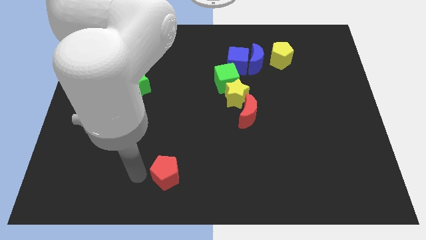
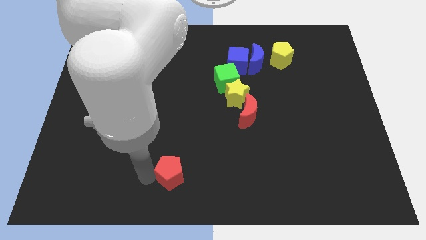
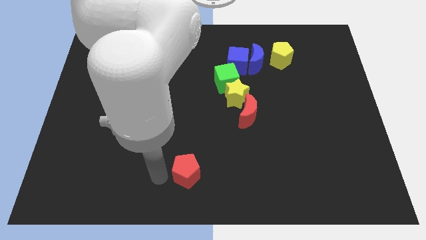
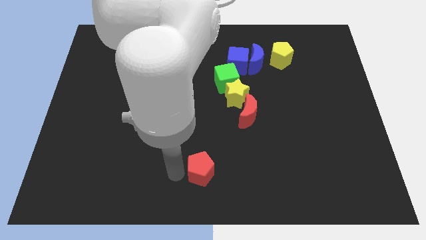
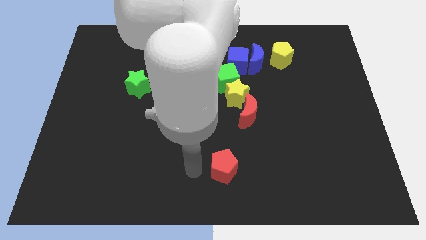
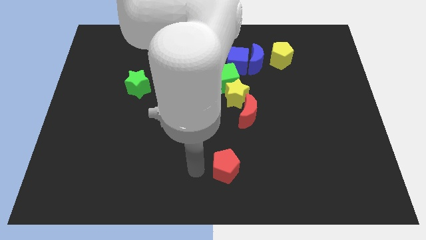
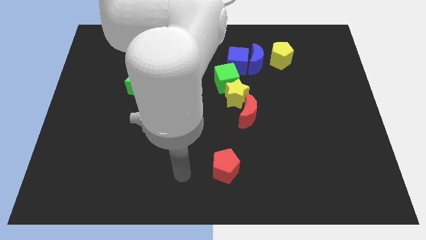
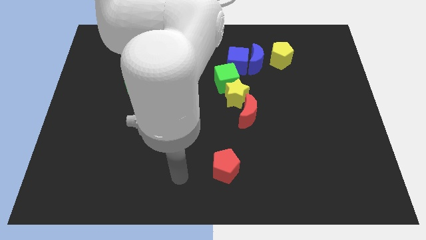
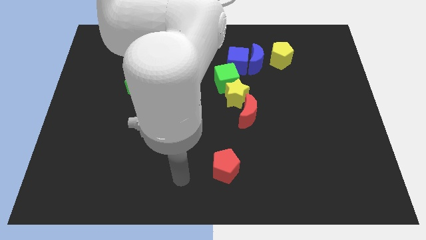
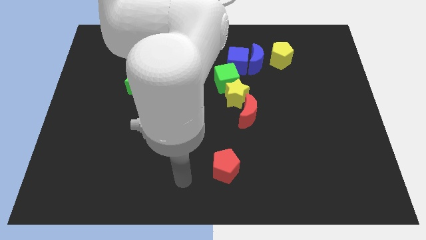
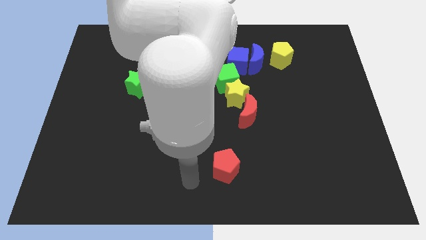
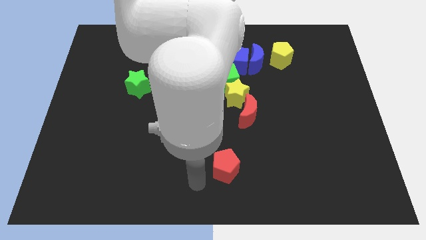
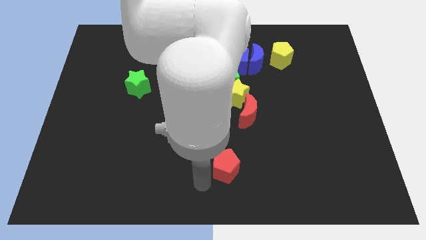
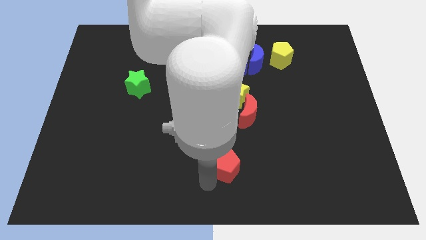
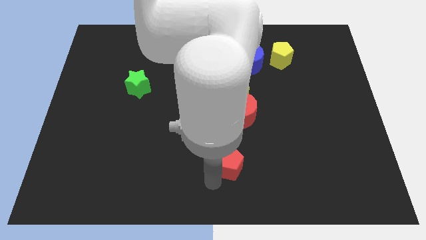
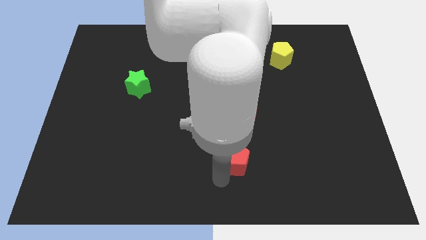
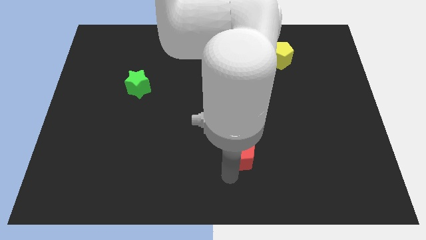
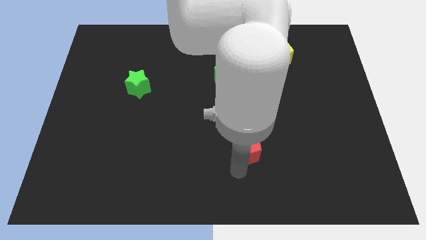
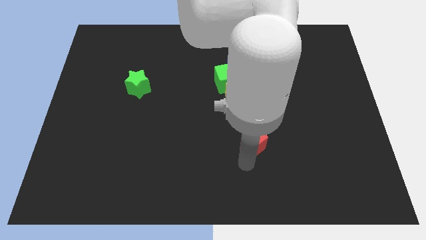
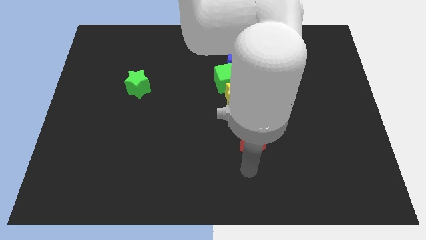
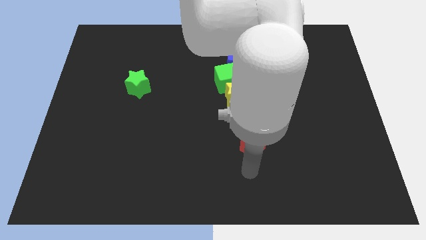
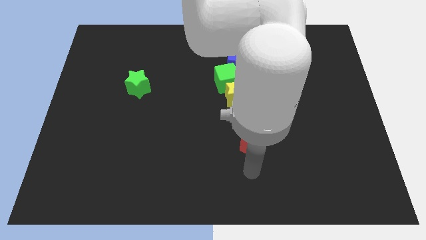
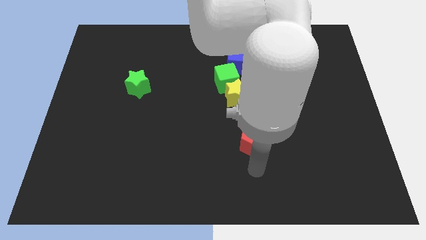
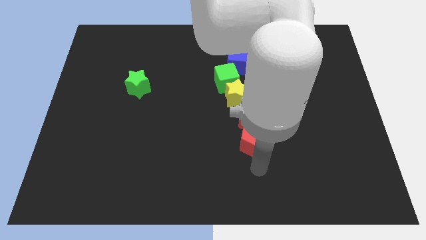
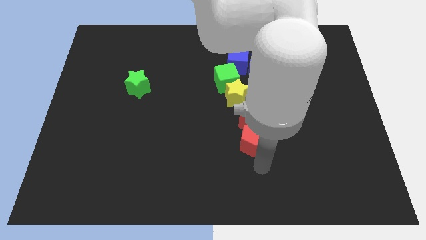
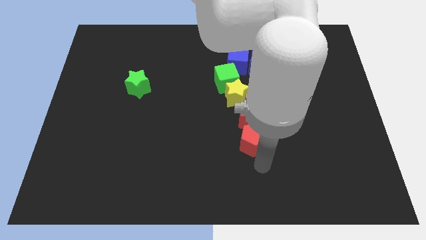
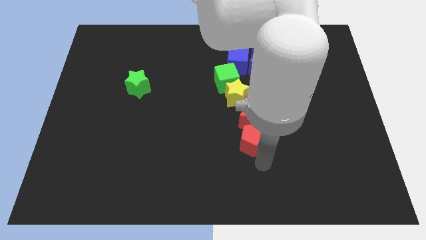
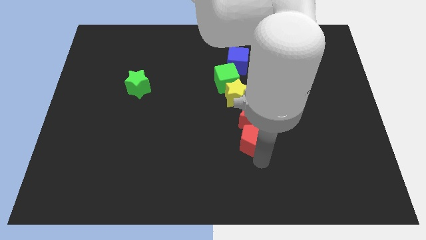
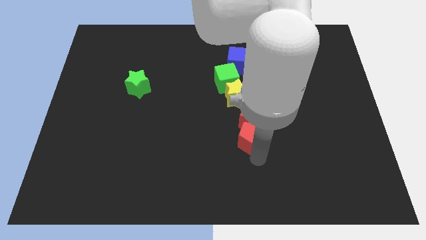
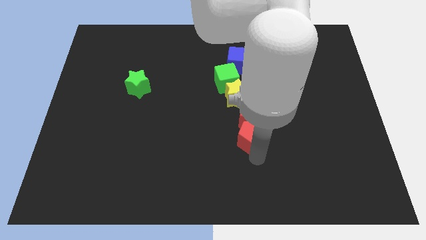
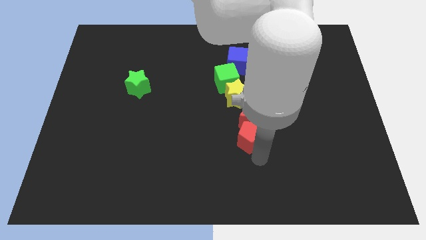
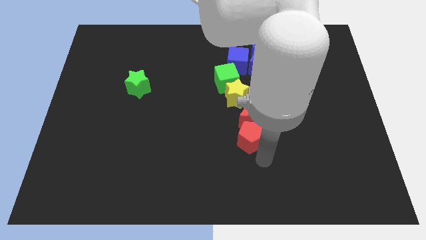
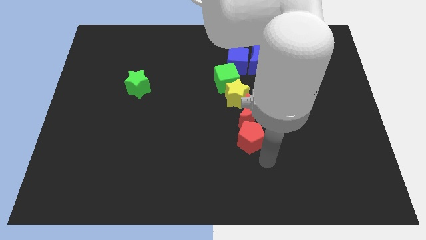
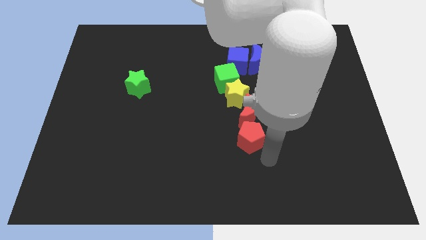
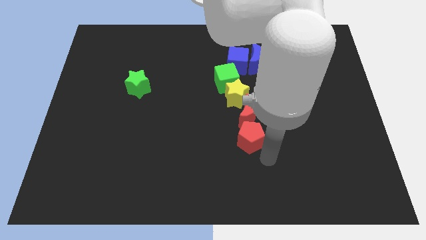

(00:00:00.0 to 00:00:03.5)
place the red pentagon at the bottom of red moon

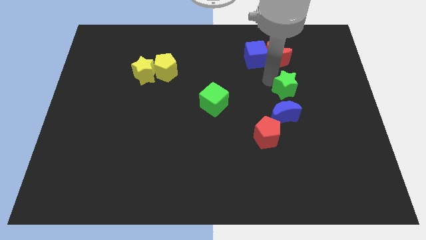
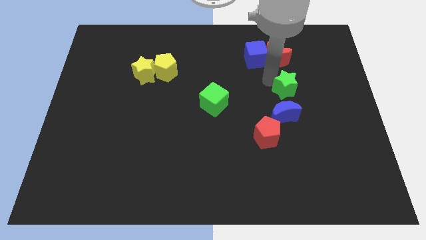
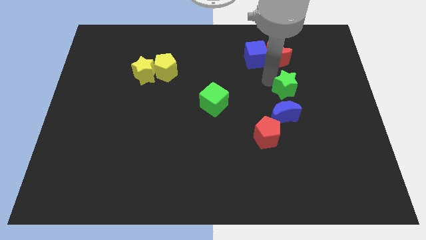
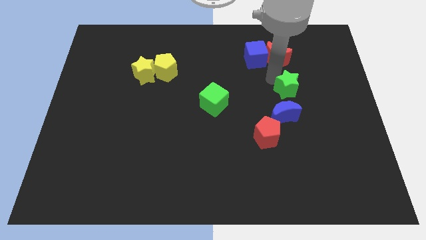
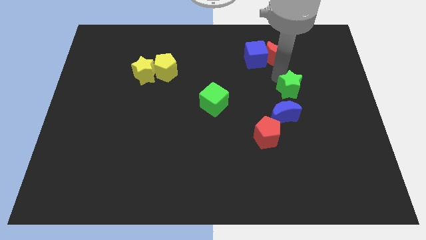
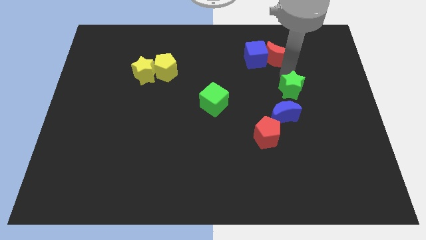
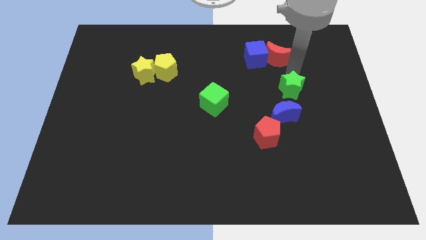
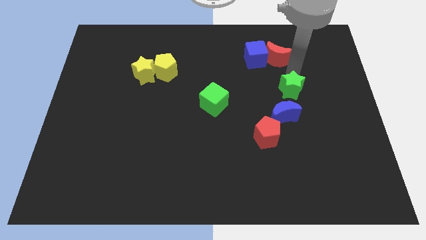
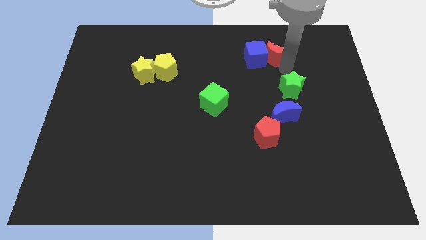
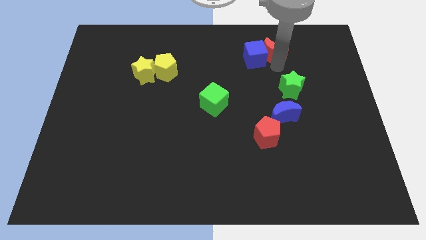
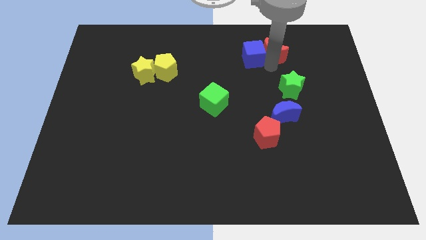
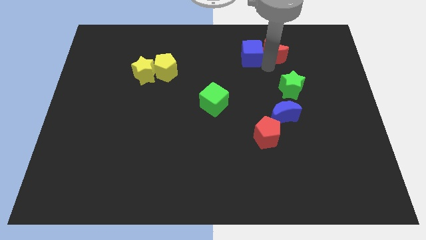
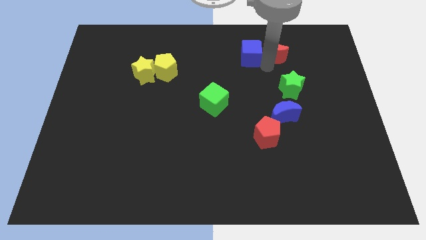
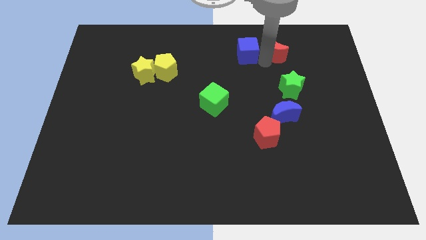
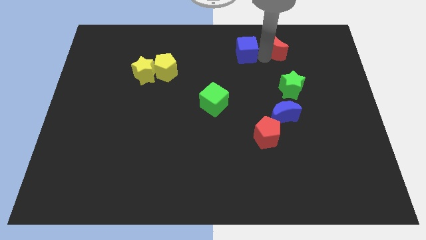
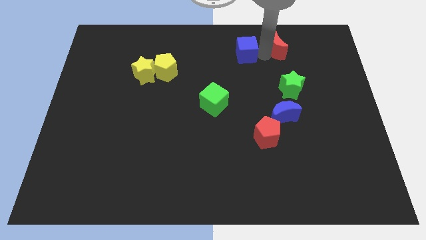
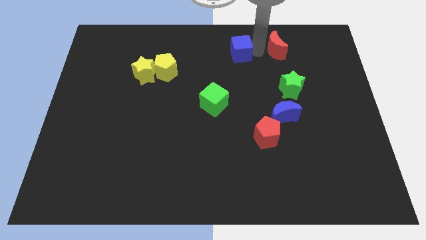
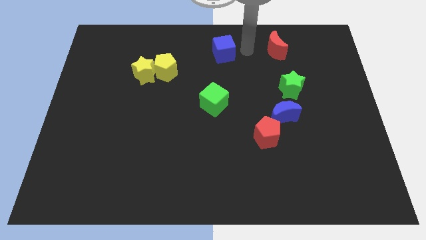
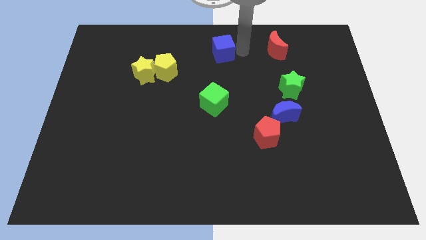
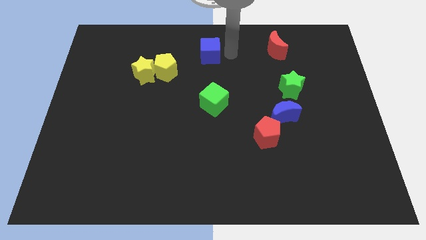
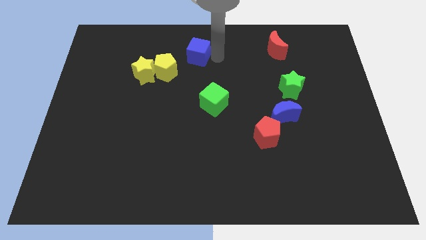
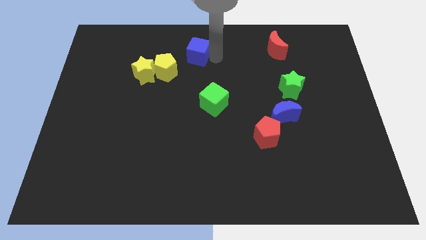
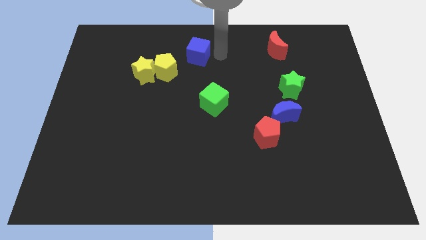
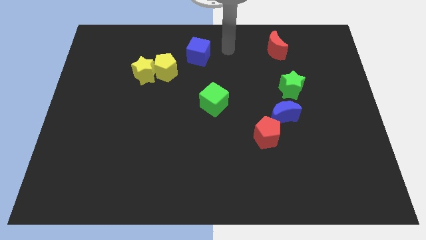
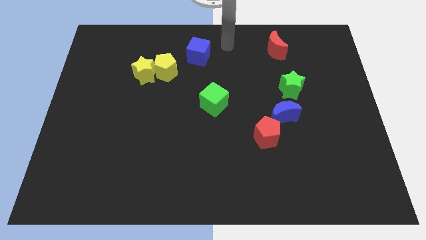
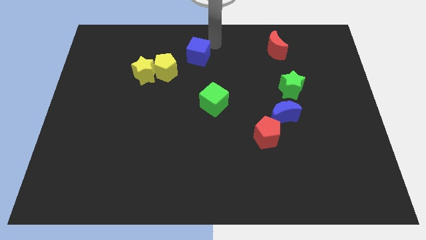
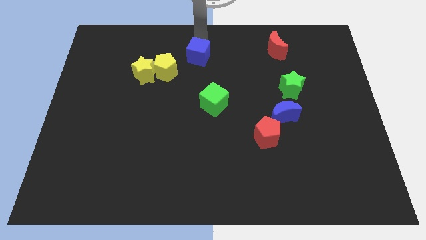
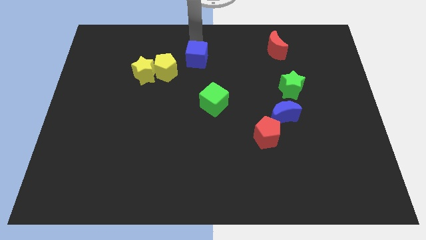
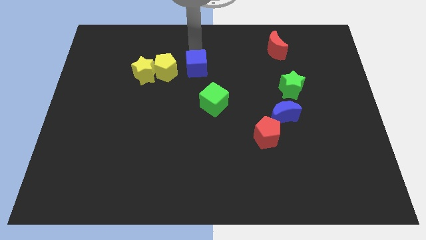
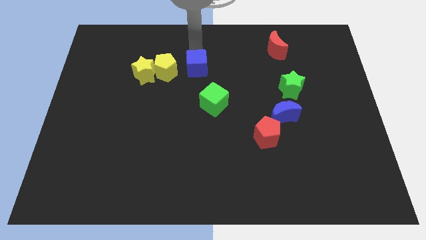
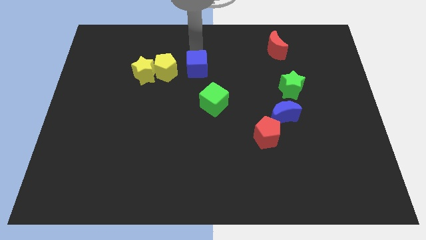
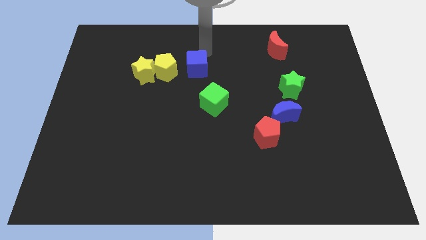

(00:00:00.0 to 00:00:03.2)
separate the blue cube from the red moon

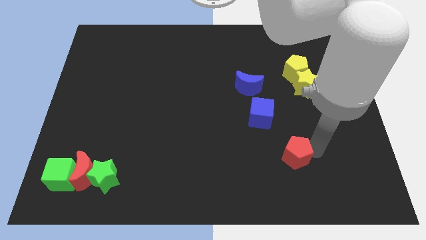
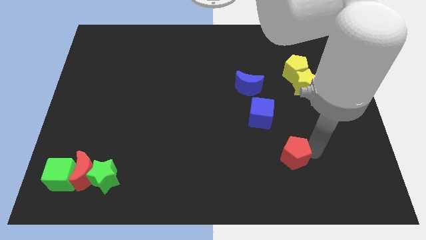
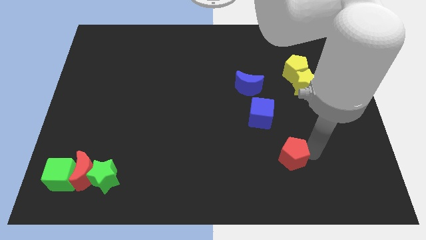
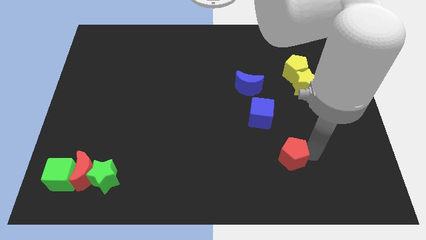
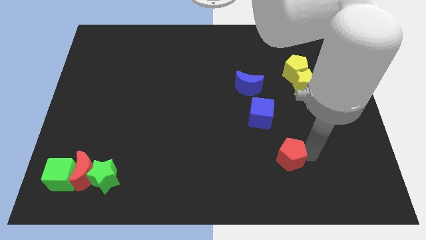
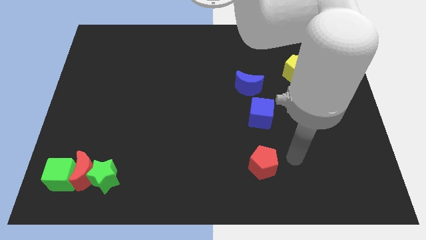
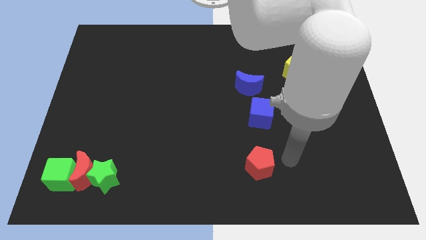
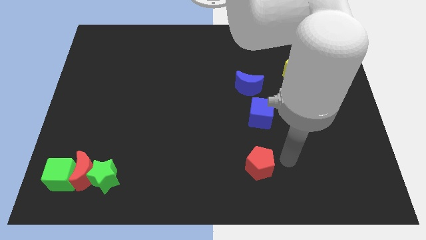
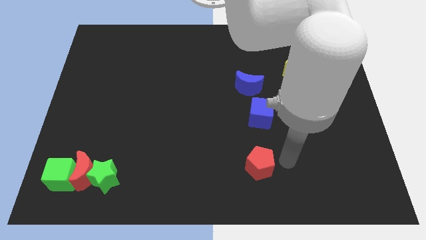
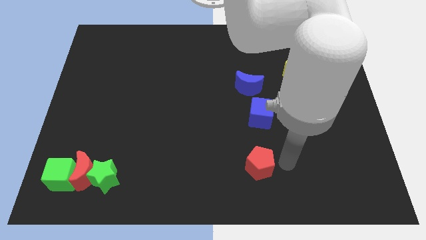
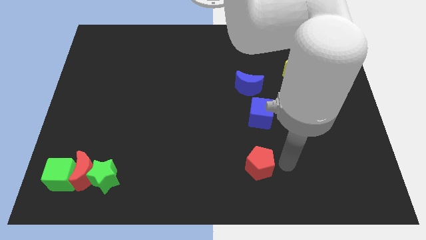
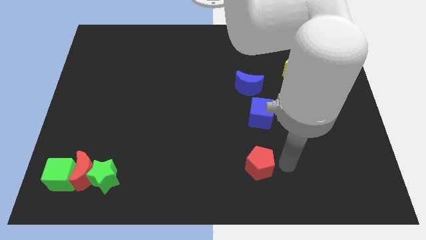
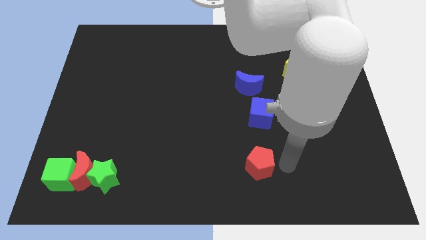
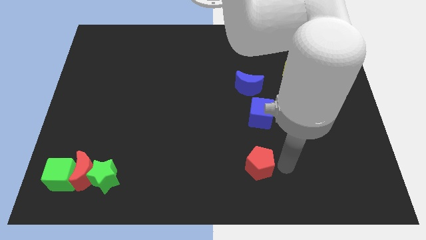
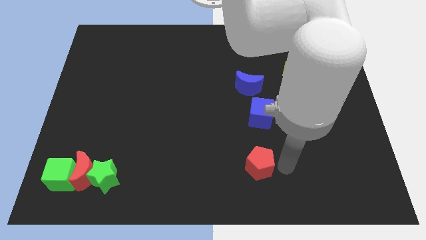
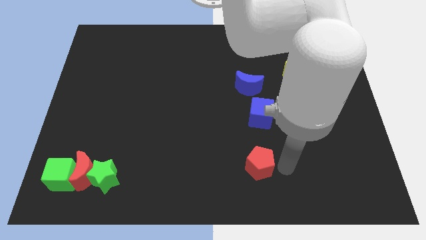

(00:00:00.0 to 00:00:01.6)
push the red pentagon diagonal to the bottom of the blue cube

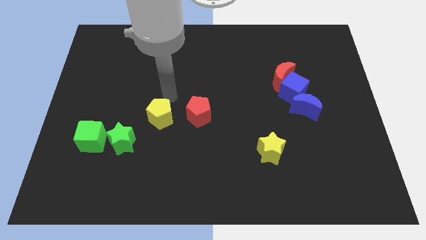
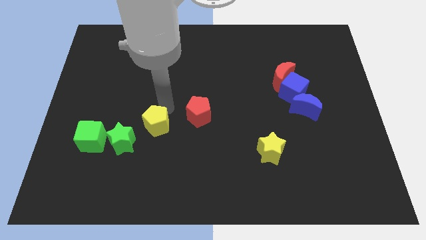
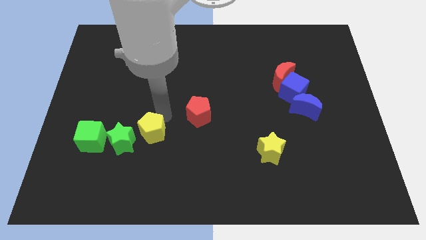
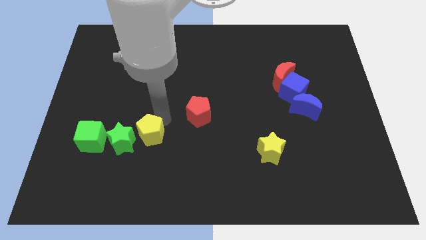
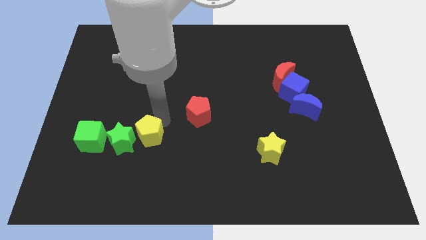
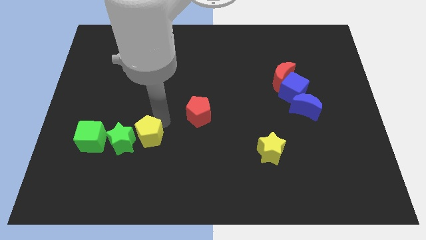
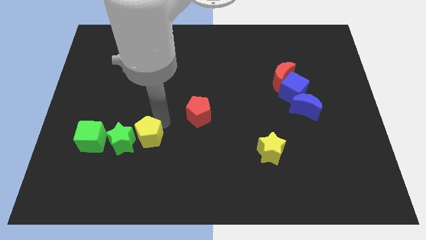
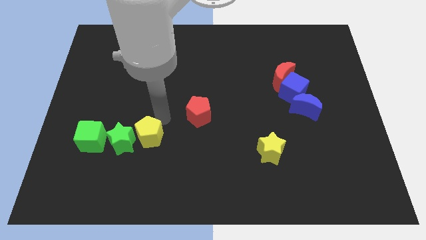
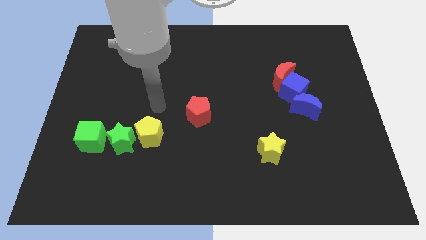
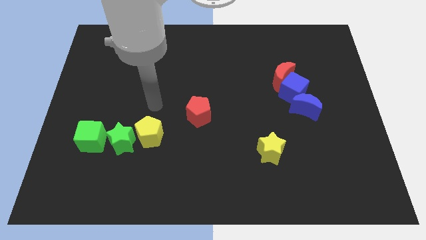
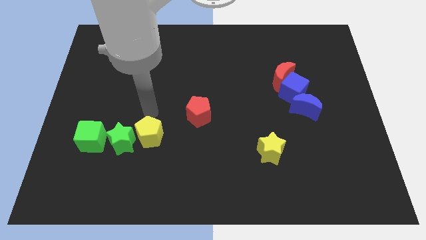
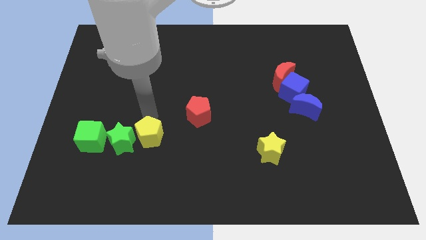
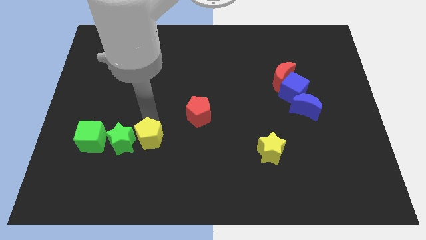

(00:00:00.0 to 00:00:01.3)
push the yellow pentagon to the right of the green star
